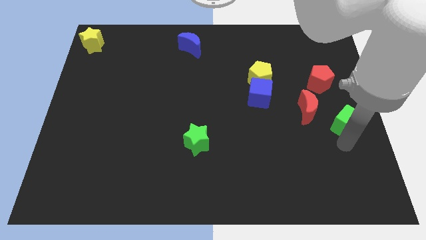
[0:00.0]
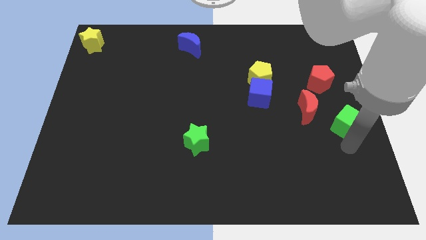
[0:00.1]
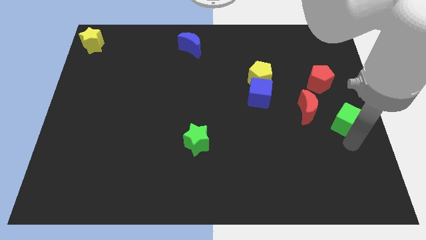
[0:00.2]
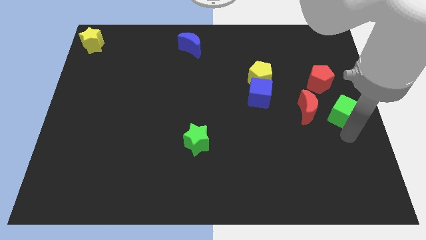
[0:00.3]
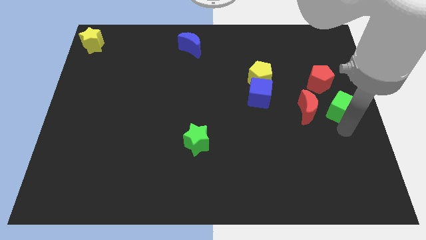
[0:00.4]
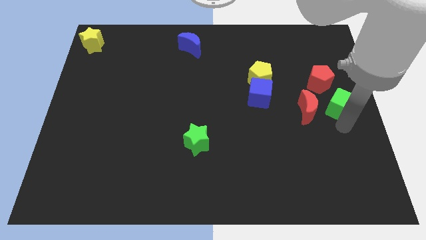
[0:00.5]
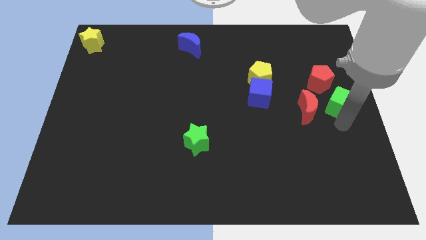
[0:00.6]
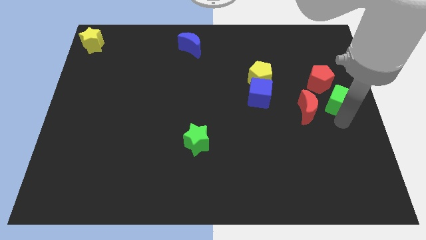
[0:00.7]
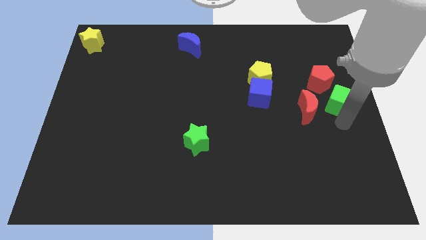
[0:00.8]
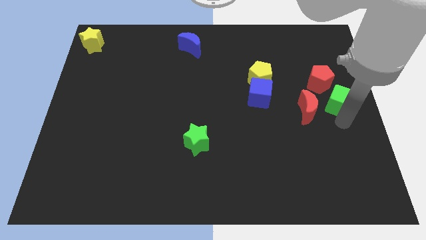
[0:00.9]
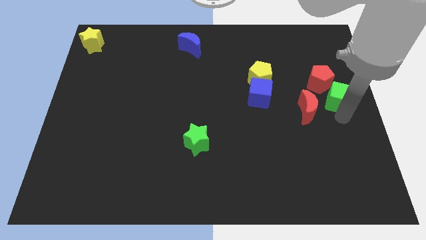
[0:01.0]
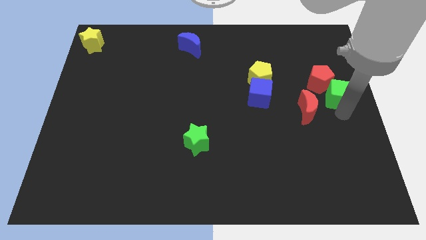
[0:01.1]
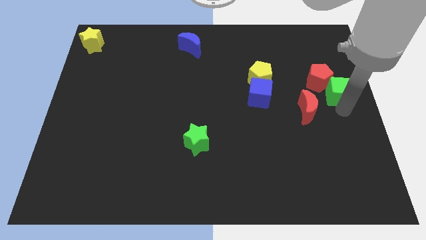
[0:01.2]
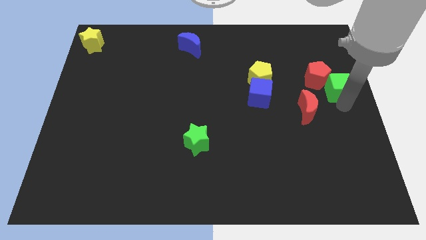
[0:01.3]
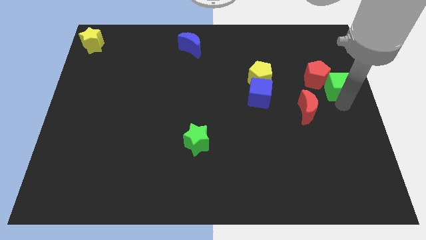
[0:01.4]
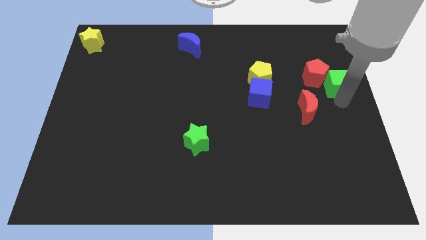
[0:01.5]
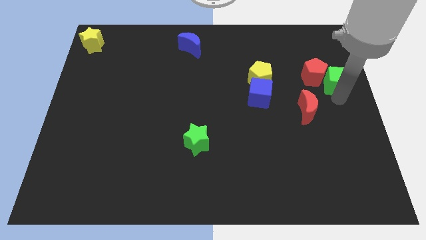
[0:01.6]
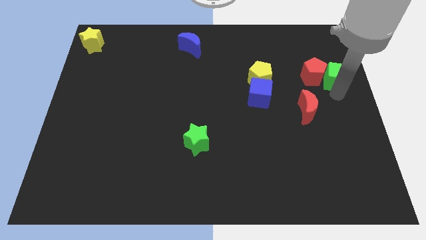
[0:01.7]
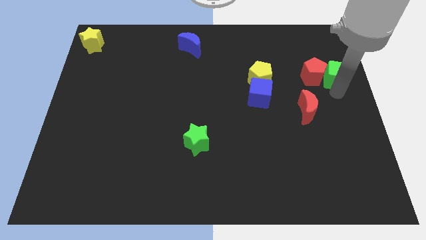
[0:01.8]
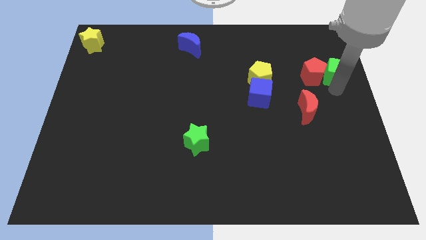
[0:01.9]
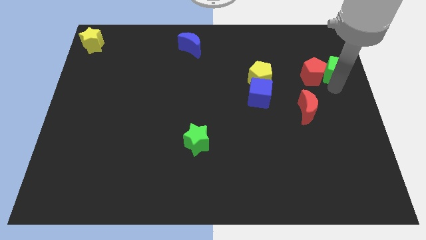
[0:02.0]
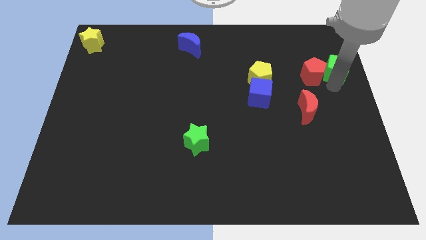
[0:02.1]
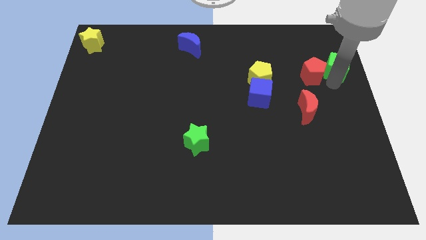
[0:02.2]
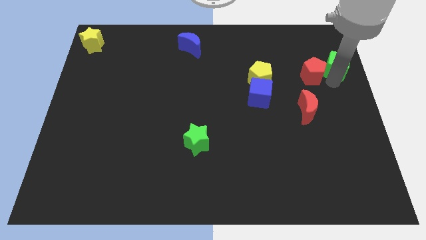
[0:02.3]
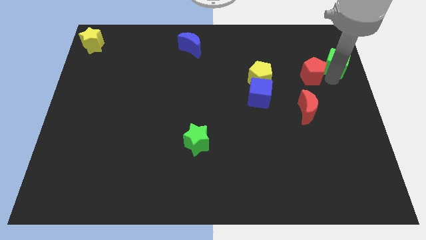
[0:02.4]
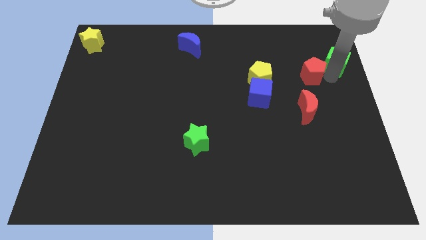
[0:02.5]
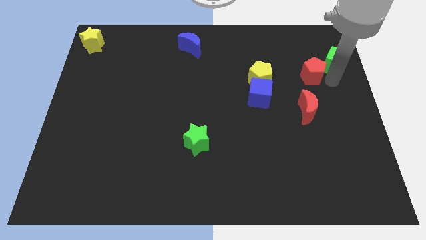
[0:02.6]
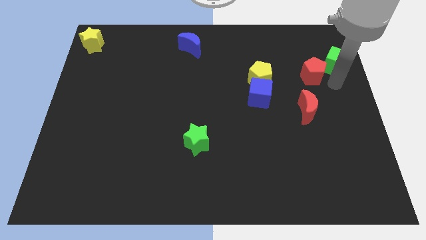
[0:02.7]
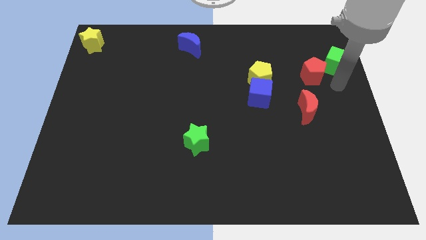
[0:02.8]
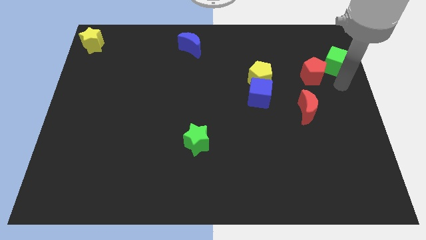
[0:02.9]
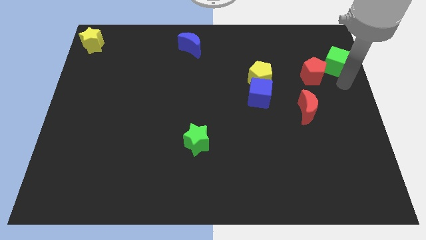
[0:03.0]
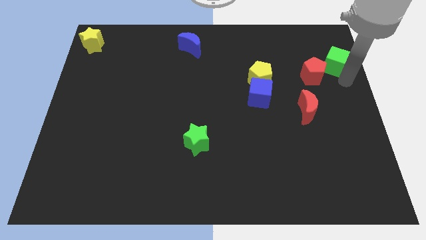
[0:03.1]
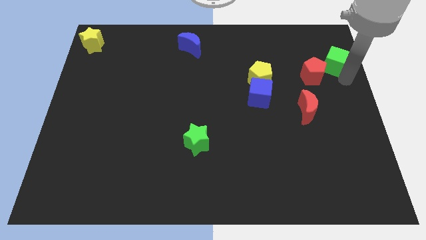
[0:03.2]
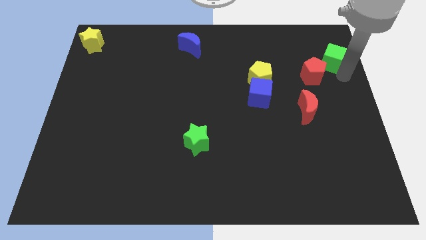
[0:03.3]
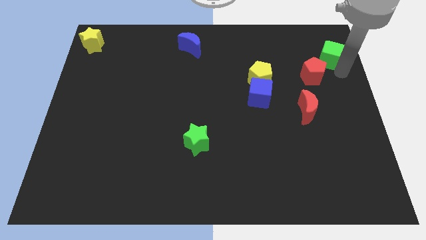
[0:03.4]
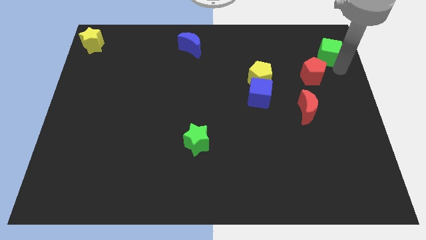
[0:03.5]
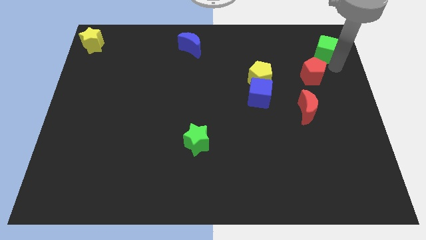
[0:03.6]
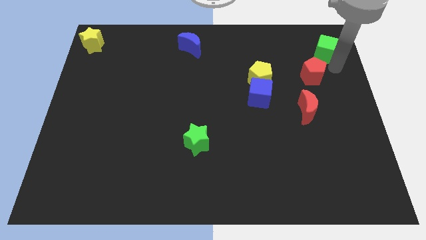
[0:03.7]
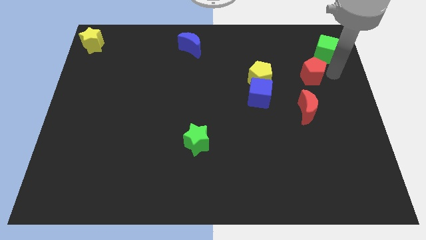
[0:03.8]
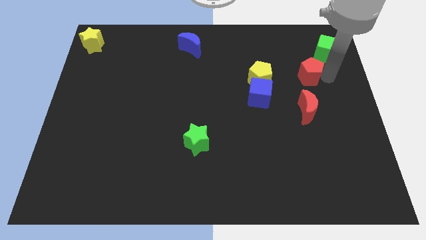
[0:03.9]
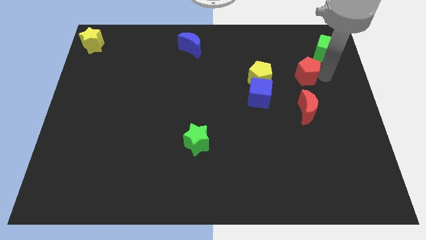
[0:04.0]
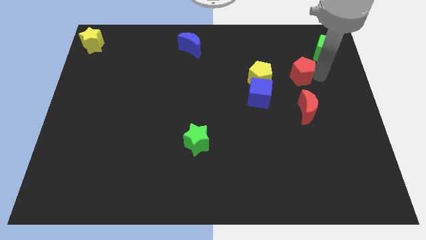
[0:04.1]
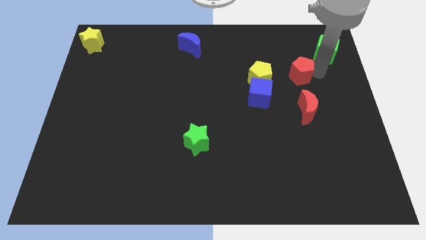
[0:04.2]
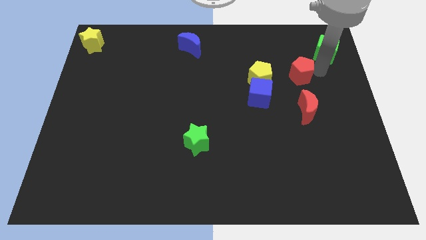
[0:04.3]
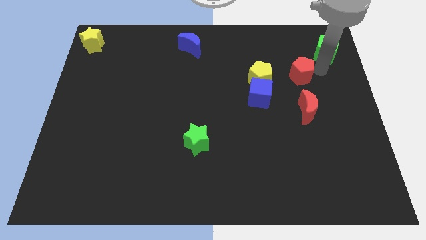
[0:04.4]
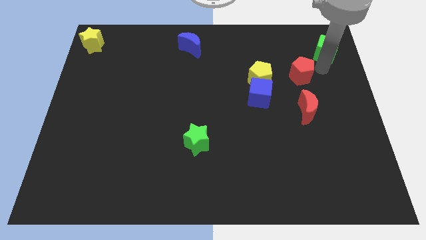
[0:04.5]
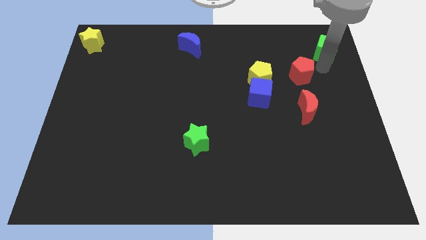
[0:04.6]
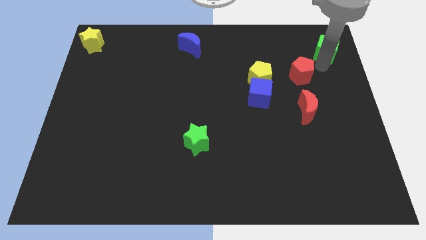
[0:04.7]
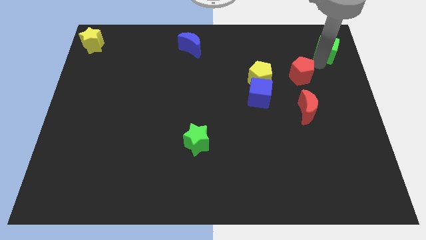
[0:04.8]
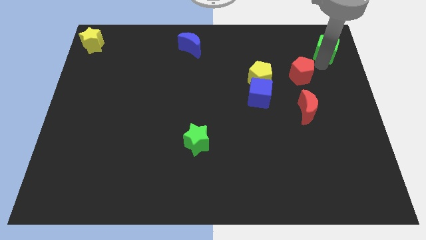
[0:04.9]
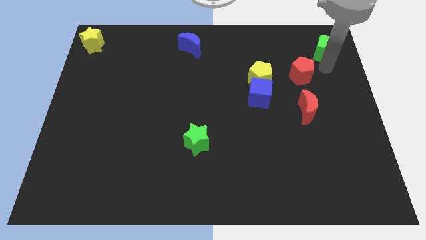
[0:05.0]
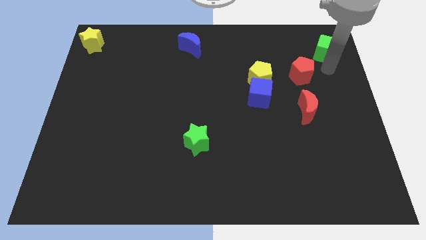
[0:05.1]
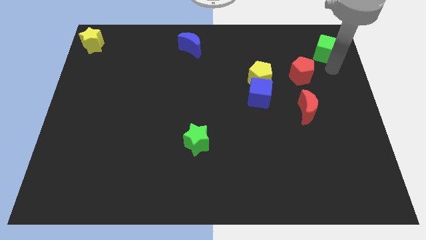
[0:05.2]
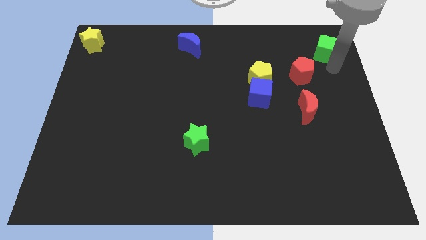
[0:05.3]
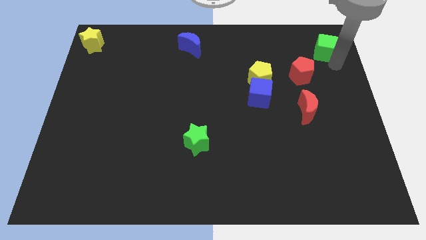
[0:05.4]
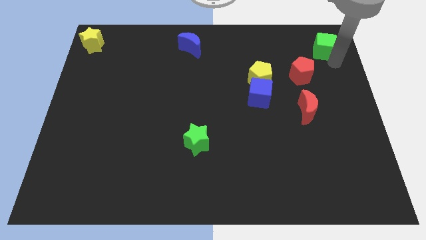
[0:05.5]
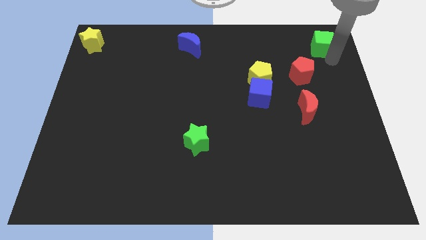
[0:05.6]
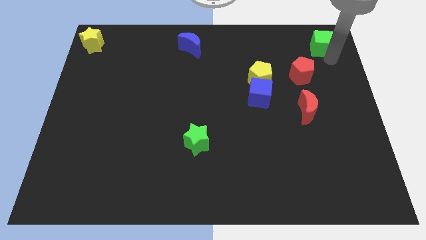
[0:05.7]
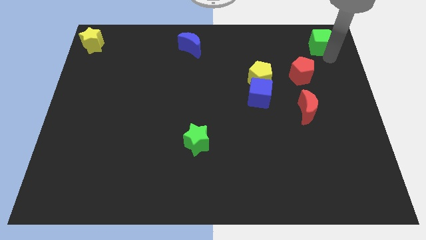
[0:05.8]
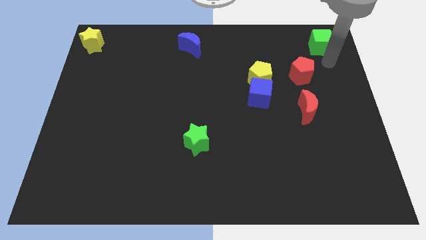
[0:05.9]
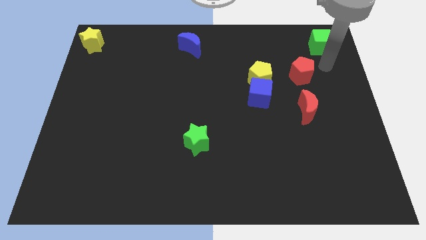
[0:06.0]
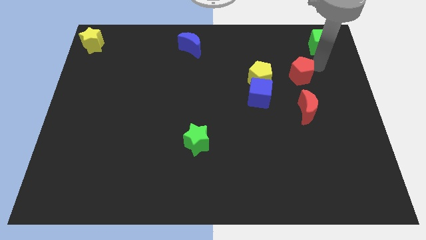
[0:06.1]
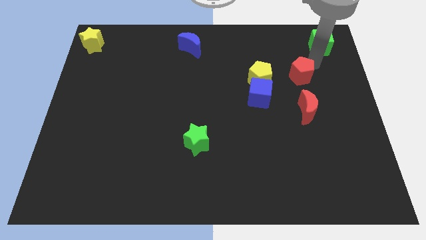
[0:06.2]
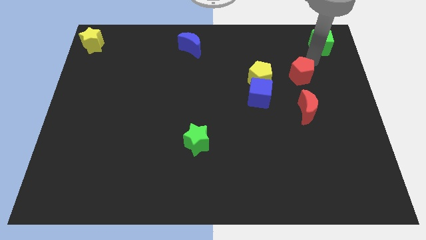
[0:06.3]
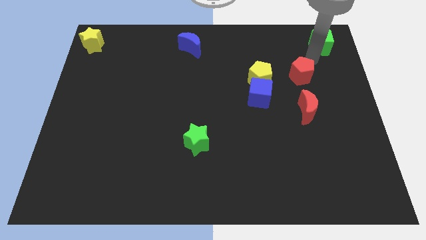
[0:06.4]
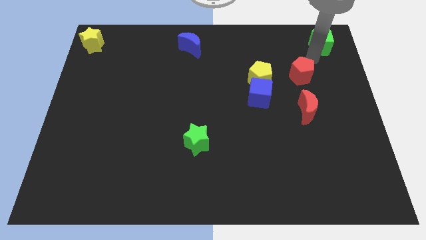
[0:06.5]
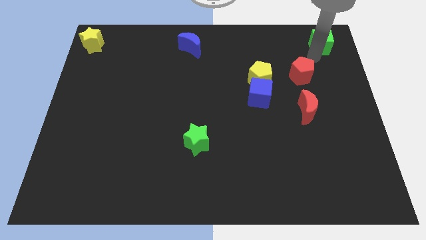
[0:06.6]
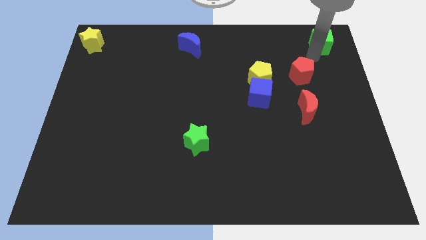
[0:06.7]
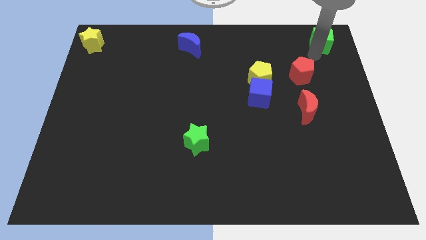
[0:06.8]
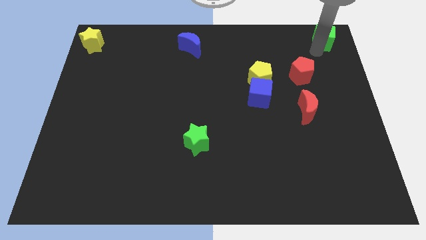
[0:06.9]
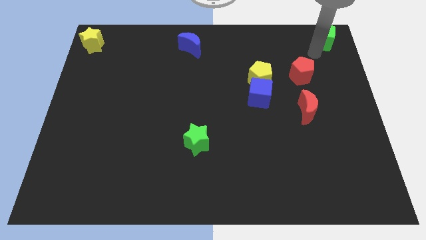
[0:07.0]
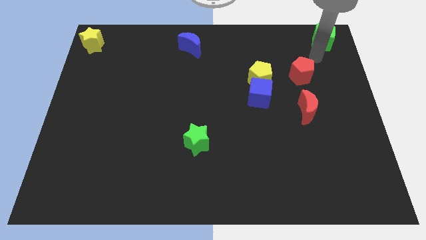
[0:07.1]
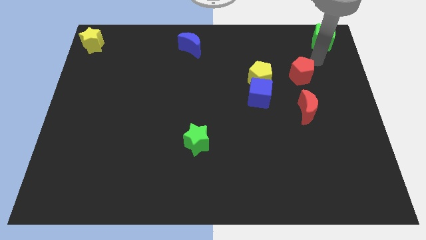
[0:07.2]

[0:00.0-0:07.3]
move the green cube to the top right corner of the board

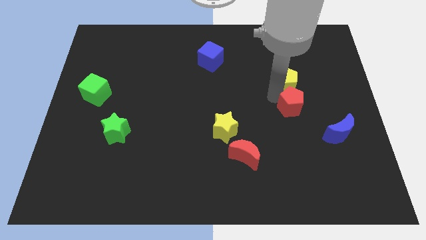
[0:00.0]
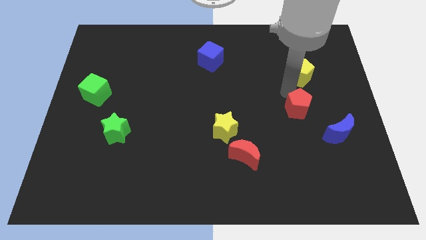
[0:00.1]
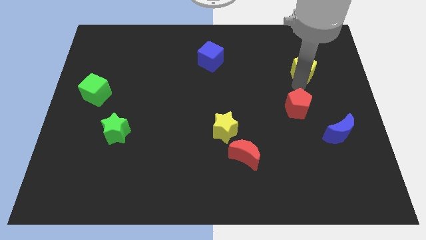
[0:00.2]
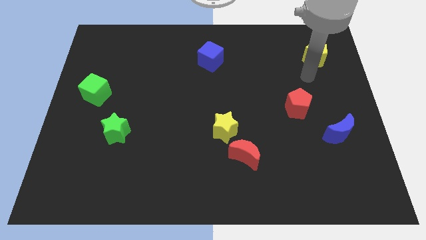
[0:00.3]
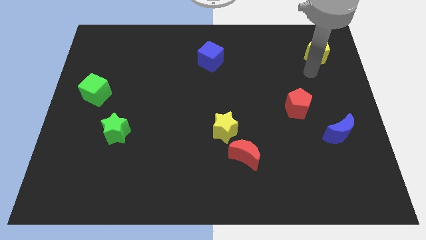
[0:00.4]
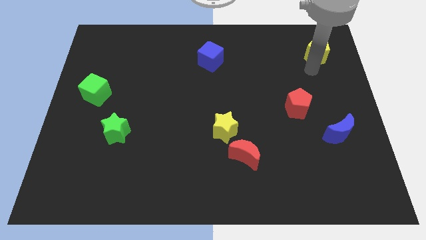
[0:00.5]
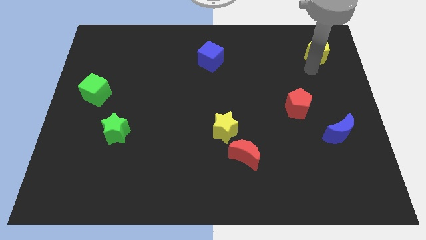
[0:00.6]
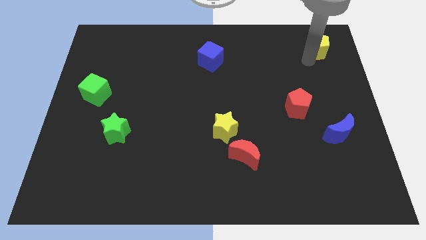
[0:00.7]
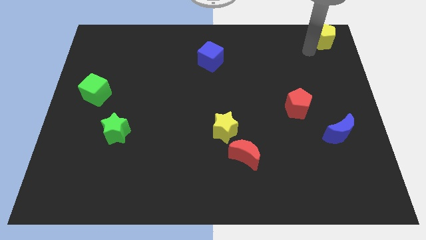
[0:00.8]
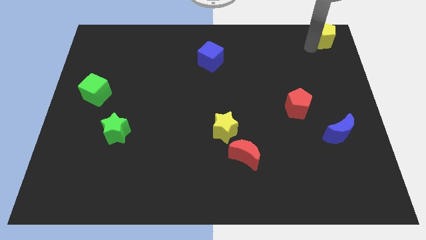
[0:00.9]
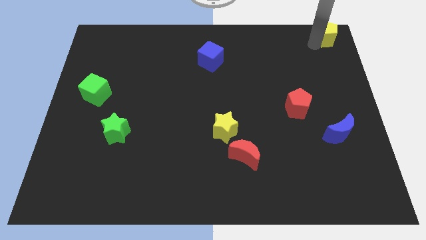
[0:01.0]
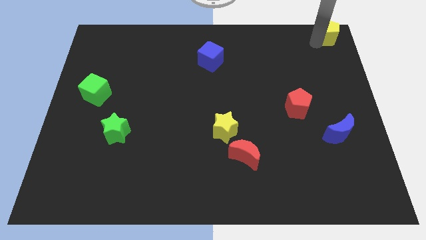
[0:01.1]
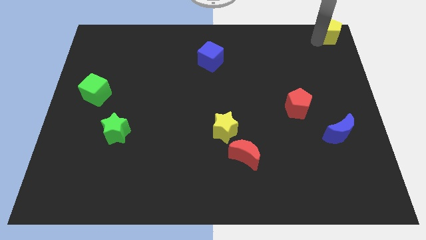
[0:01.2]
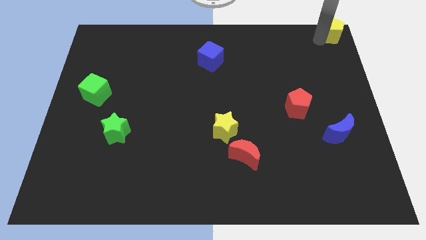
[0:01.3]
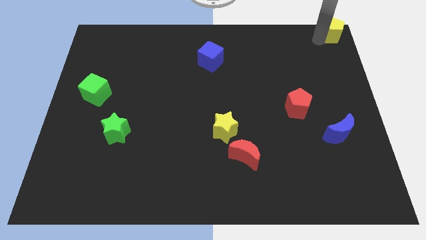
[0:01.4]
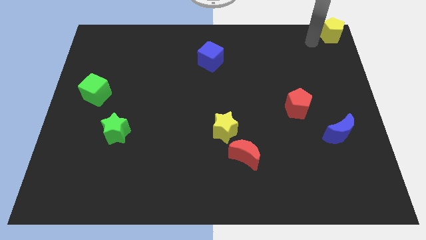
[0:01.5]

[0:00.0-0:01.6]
push the yellow pentagon to the top right corner
